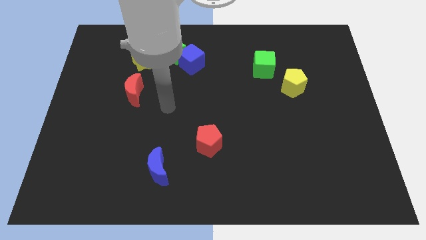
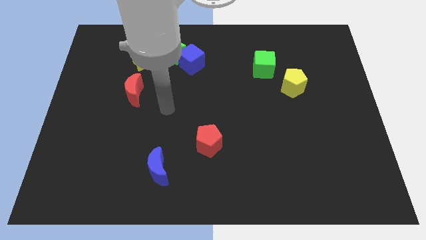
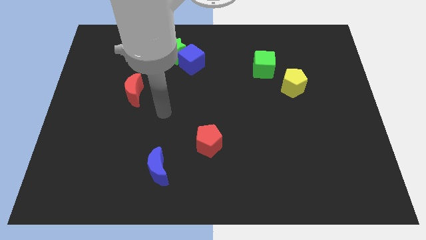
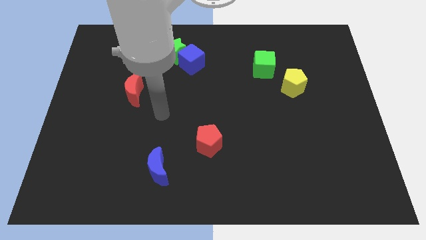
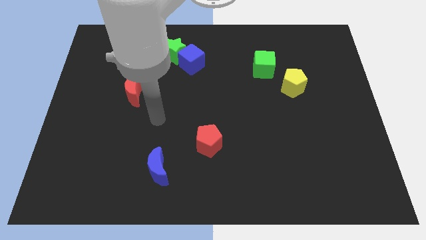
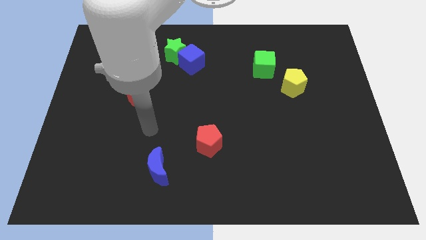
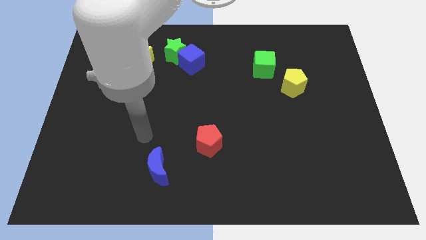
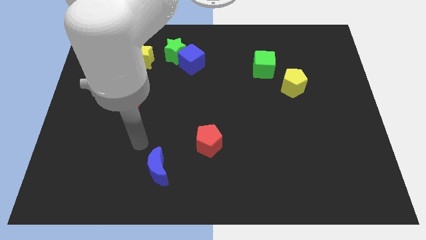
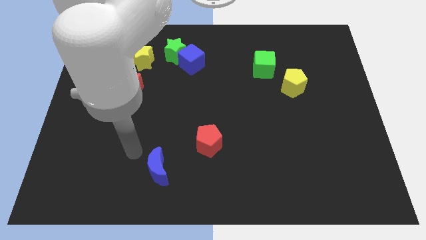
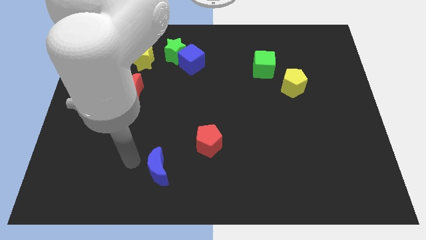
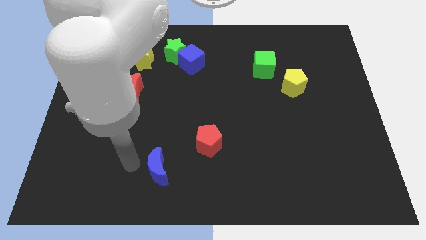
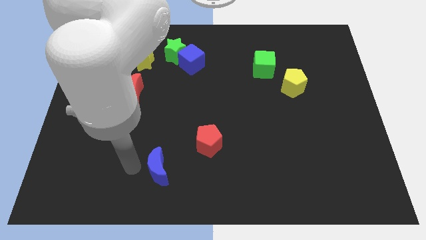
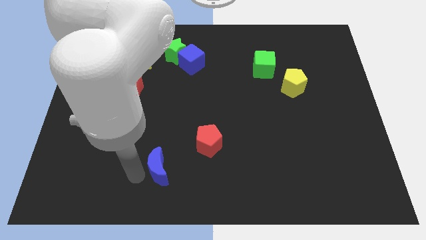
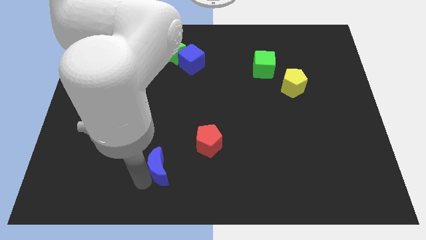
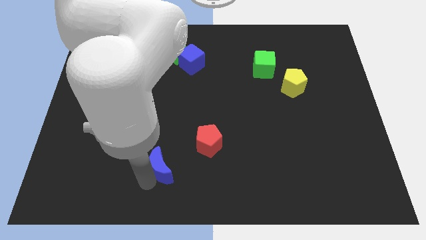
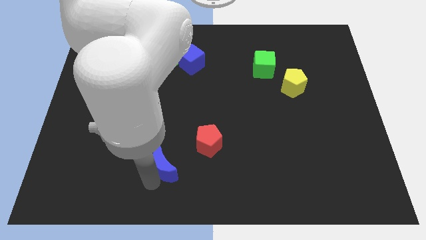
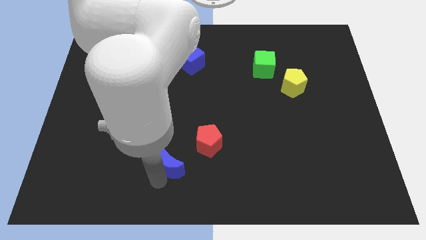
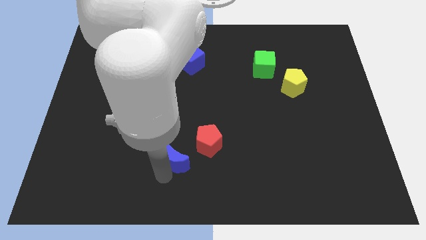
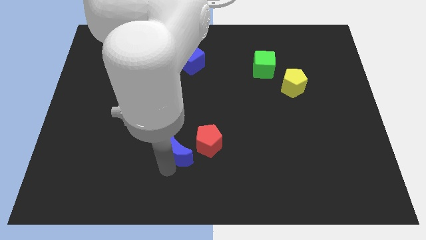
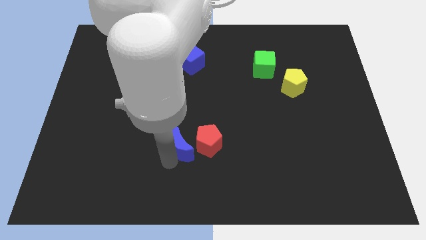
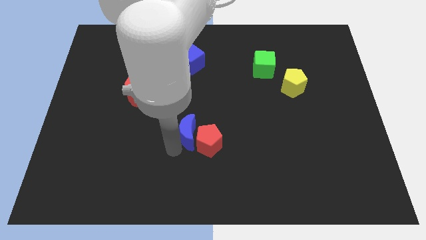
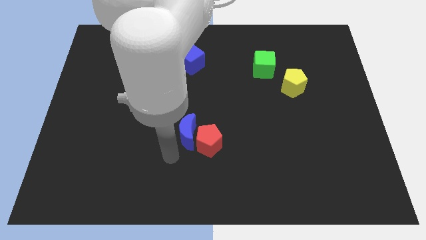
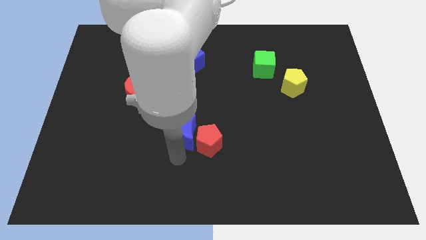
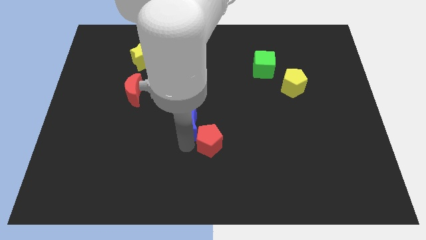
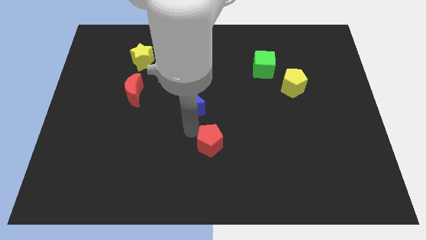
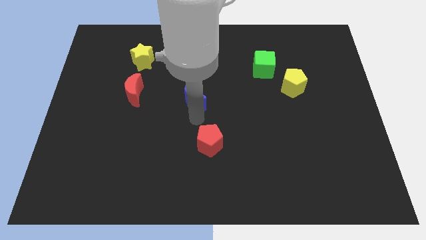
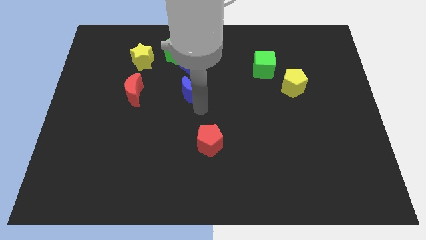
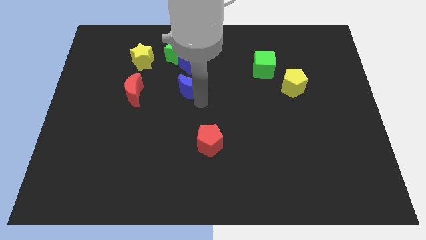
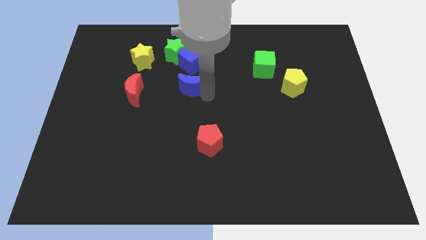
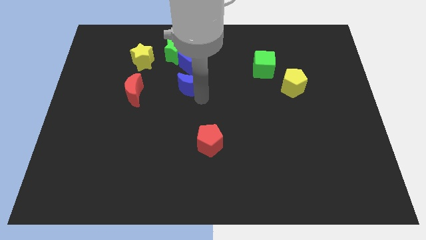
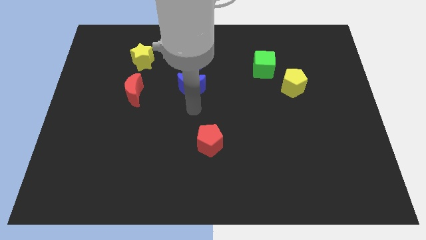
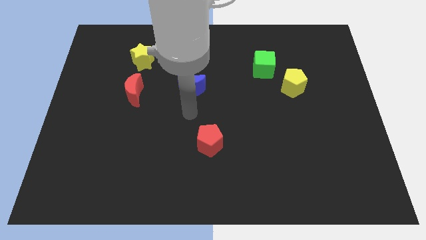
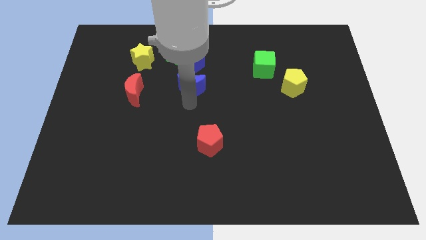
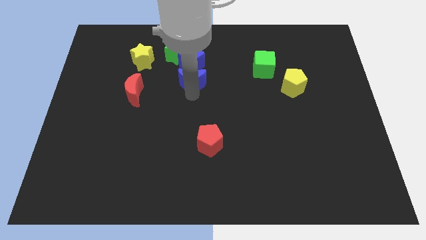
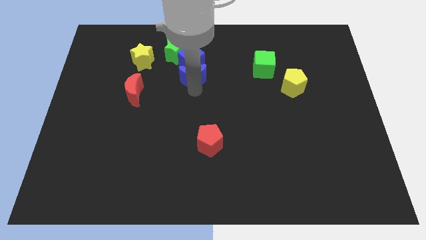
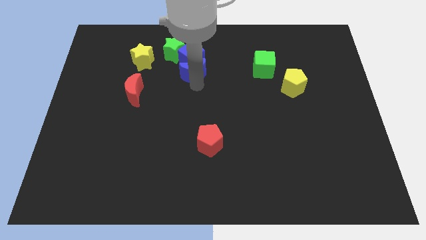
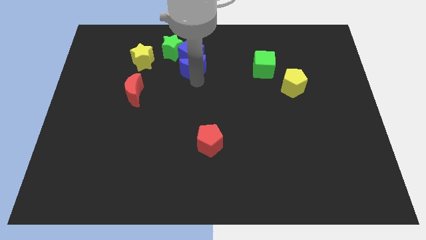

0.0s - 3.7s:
move the blue moon close to the blue cube

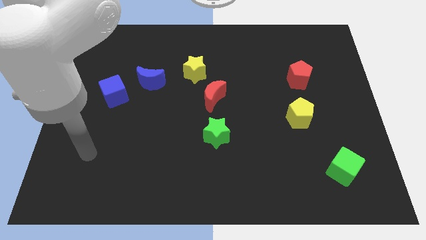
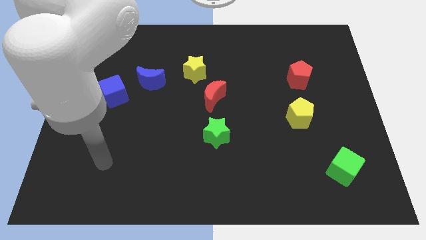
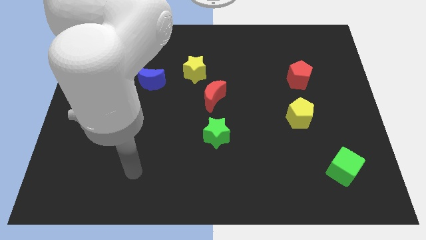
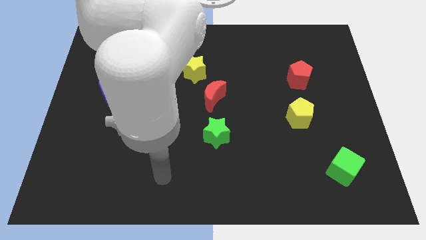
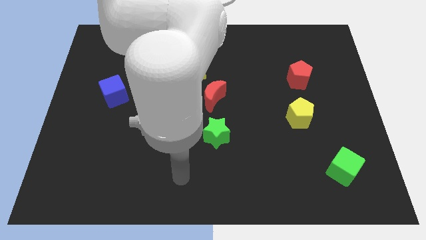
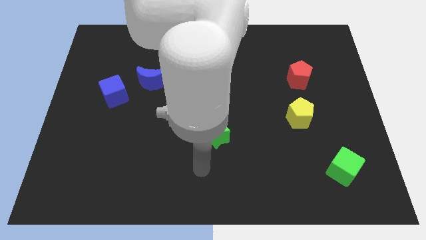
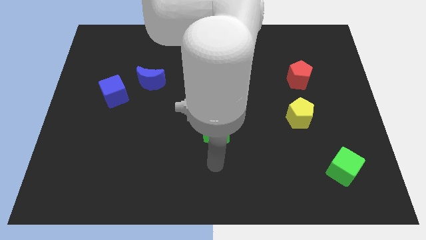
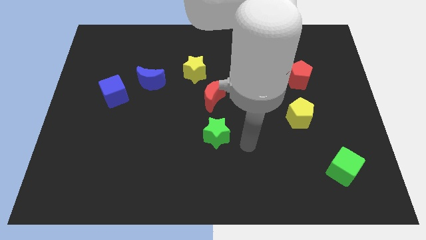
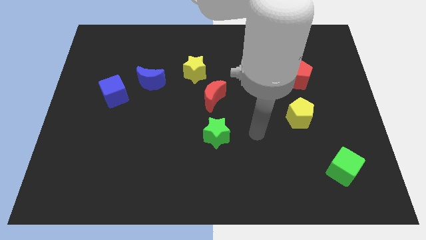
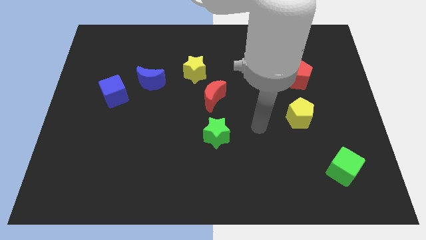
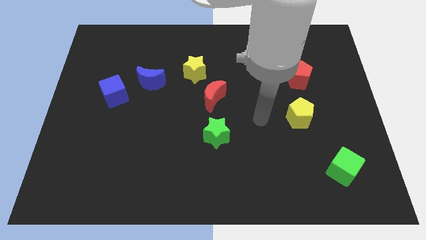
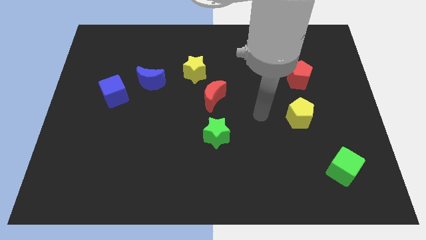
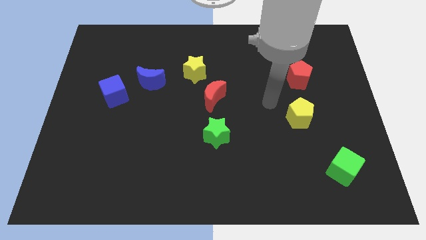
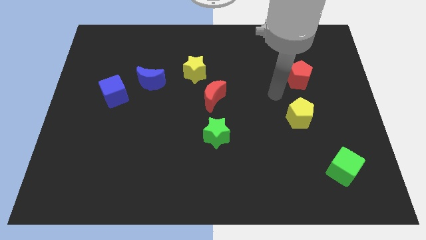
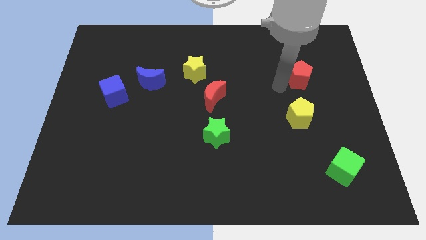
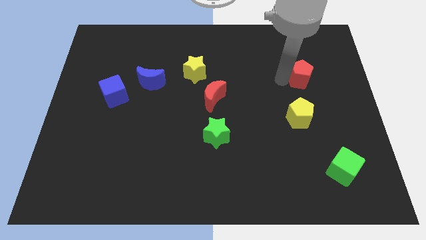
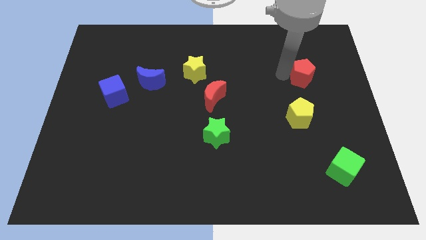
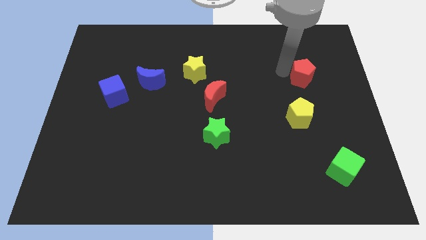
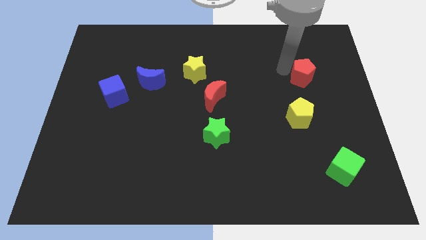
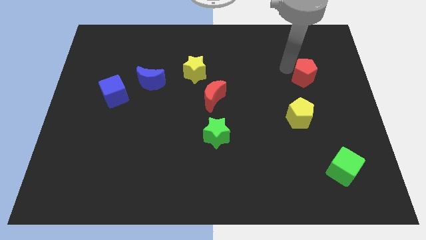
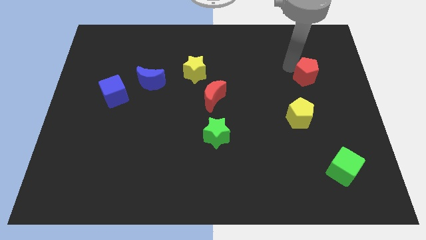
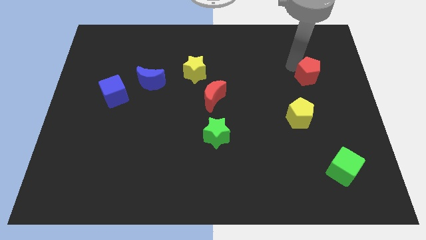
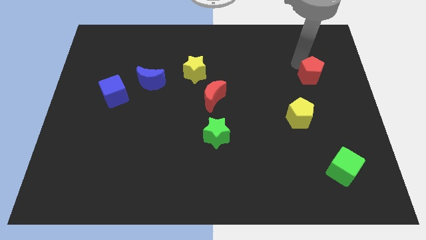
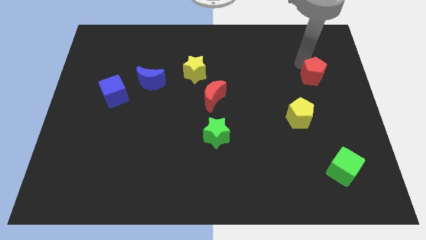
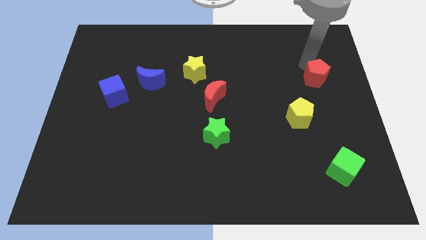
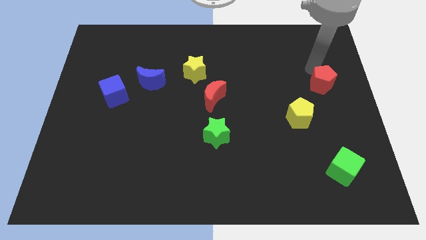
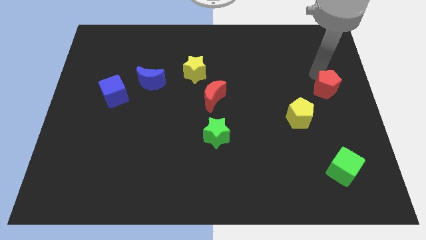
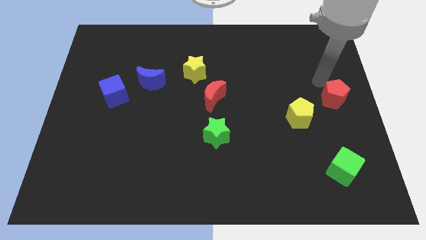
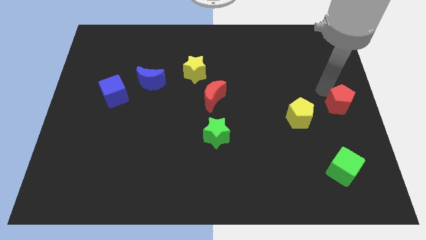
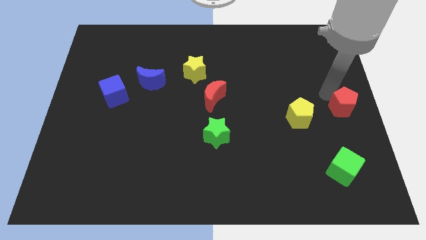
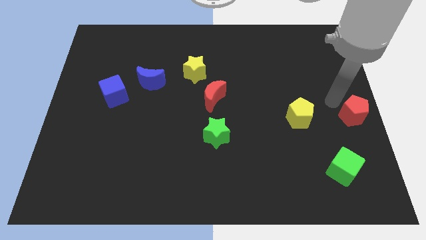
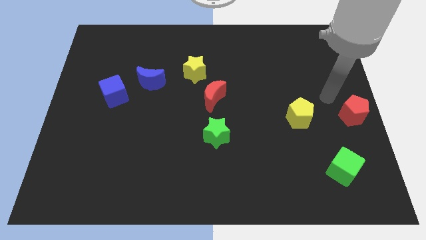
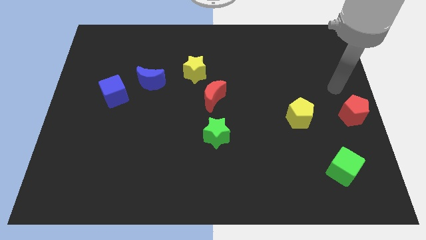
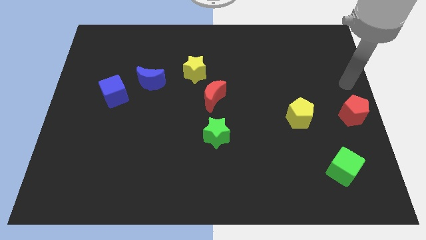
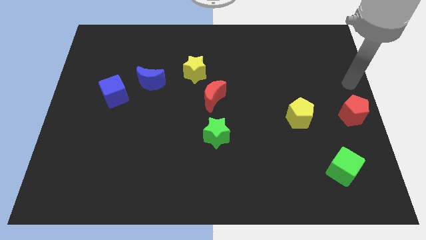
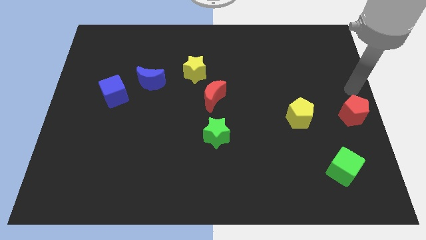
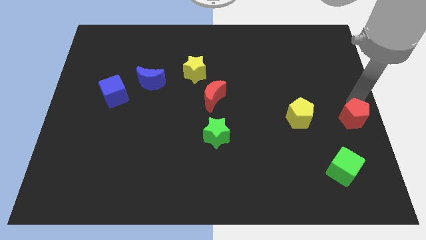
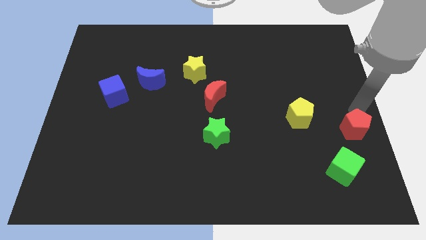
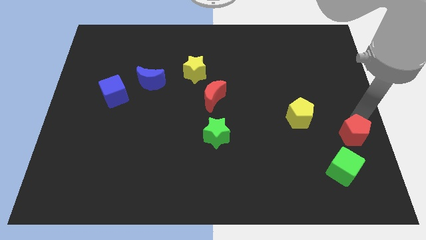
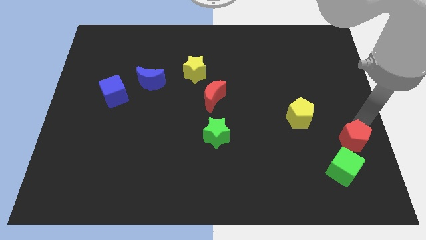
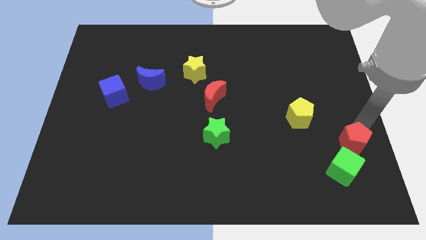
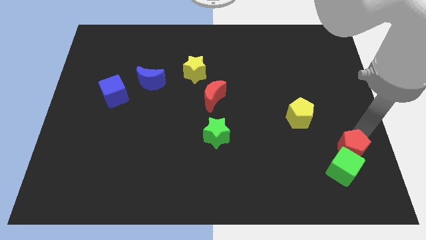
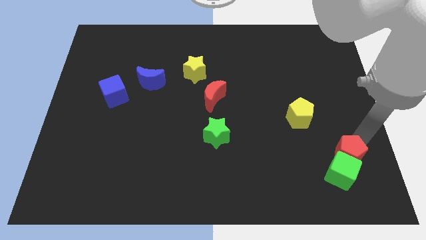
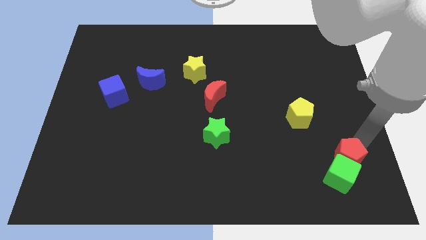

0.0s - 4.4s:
move the red pentagon close to the green cube

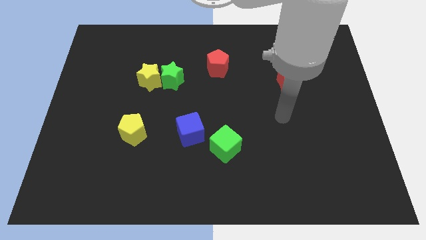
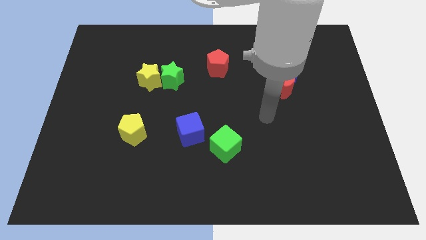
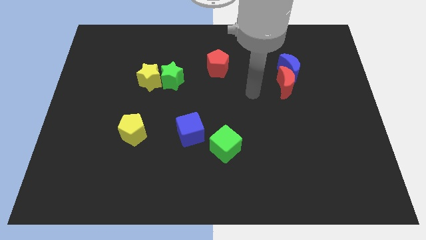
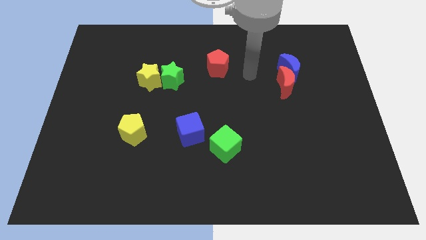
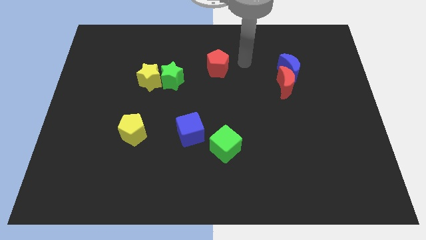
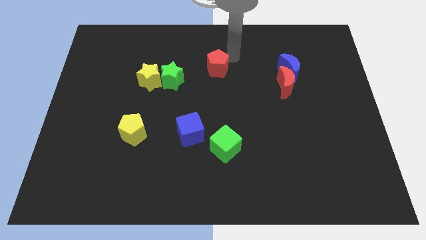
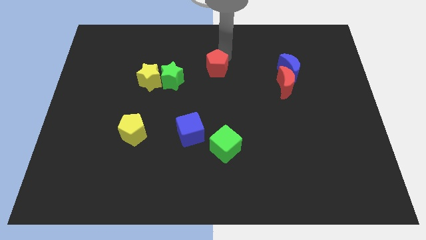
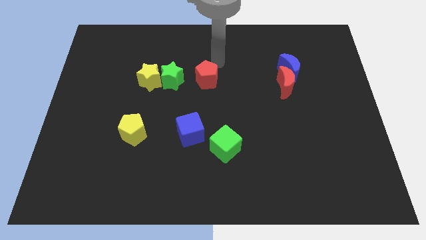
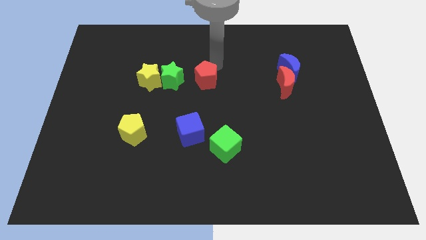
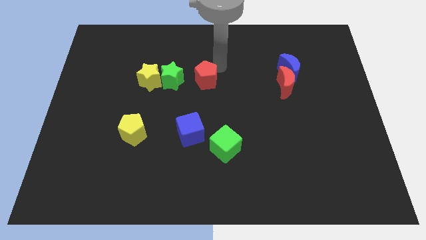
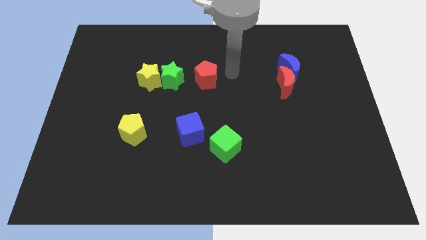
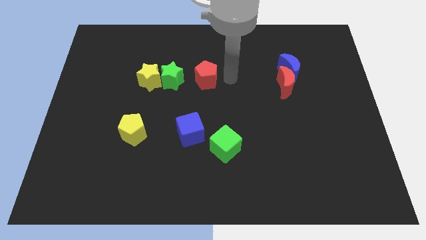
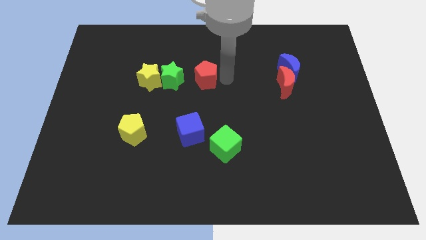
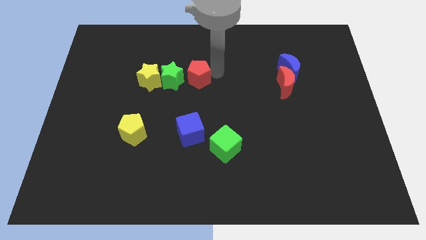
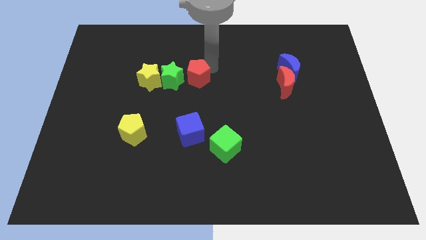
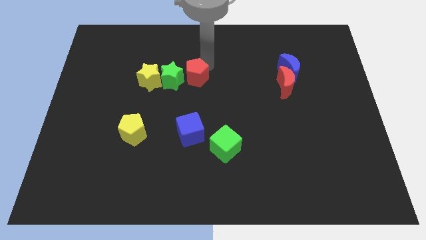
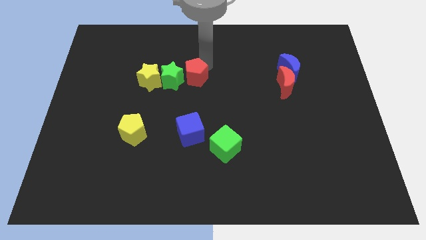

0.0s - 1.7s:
move the red pentagon close to the green star
